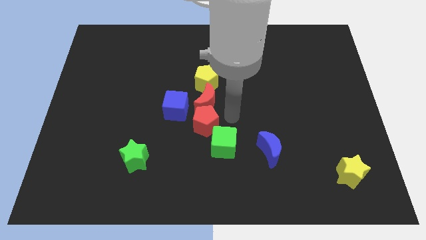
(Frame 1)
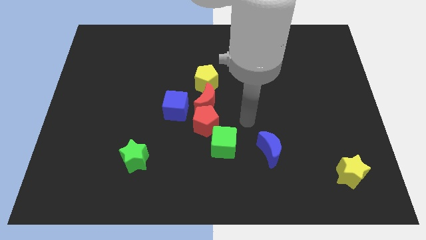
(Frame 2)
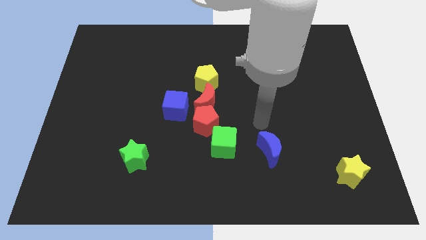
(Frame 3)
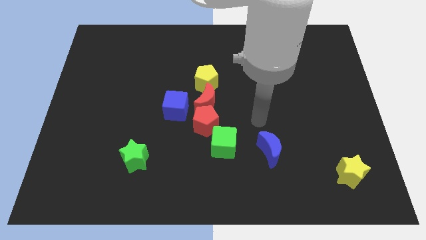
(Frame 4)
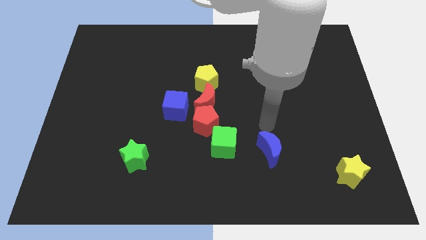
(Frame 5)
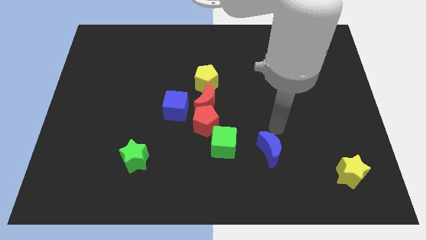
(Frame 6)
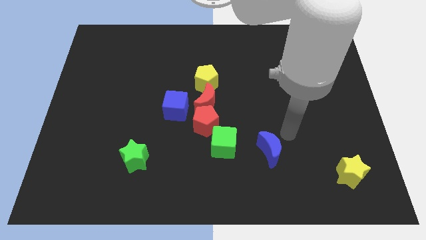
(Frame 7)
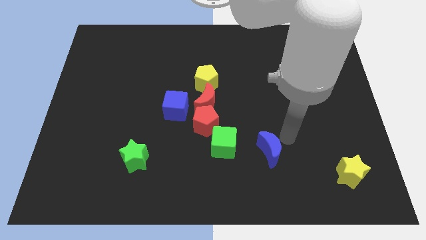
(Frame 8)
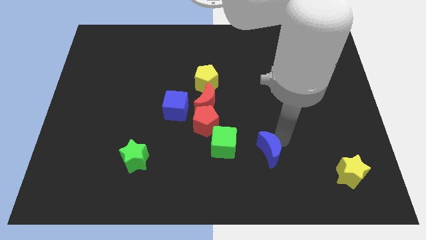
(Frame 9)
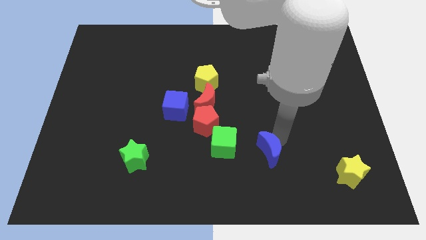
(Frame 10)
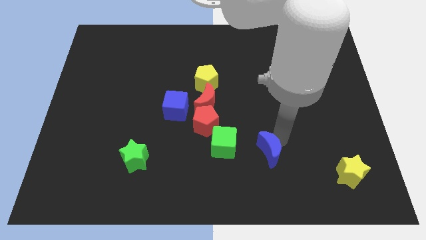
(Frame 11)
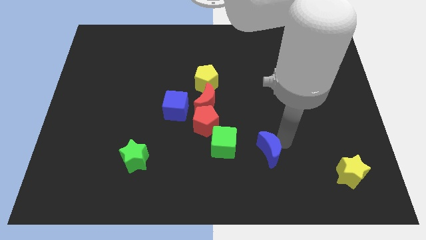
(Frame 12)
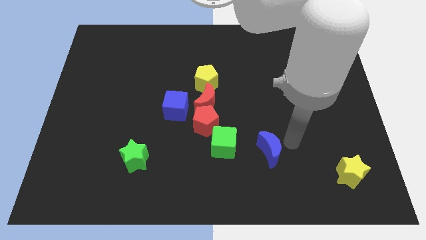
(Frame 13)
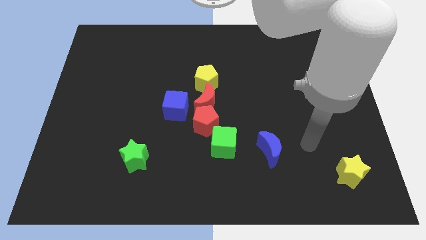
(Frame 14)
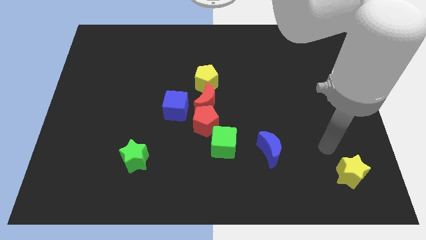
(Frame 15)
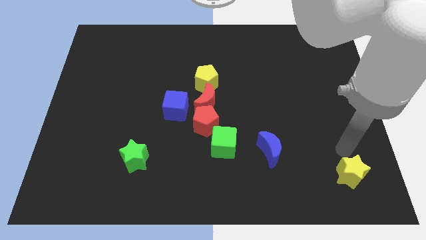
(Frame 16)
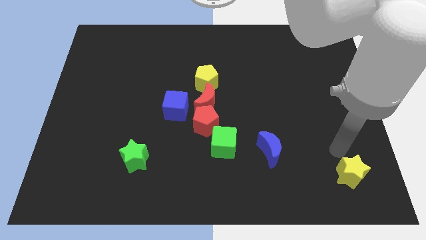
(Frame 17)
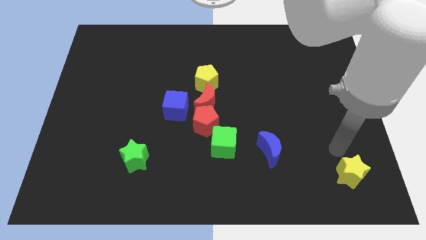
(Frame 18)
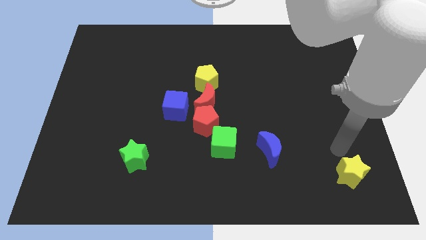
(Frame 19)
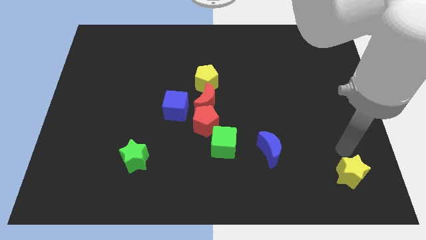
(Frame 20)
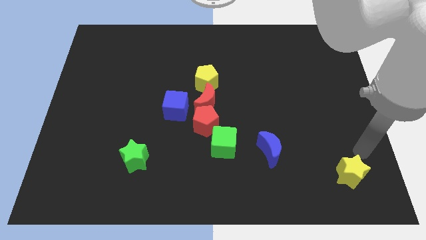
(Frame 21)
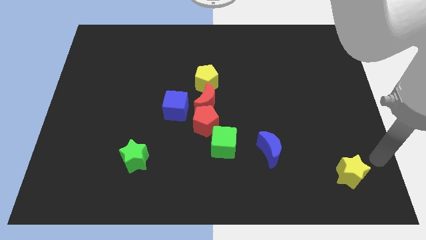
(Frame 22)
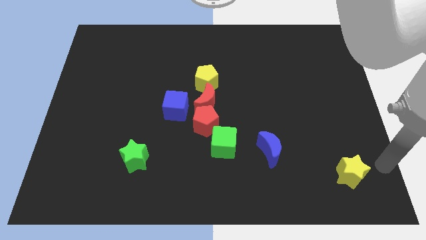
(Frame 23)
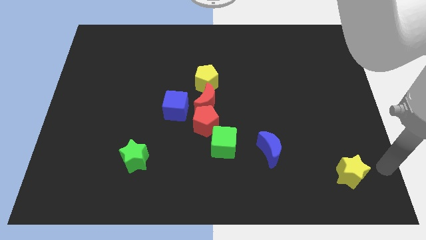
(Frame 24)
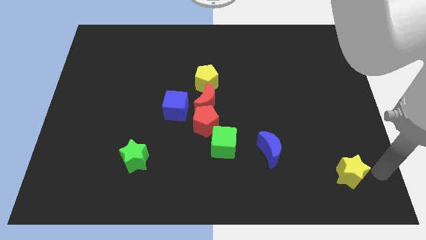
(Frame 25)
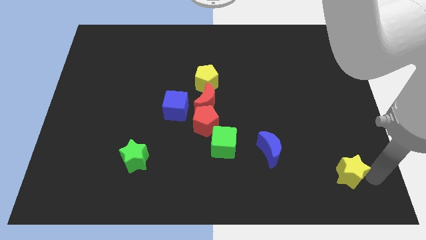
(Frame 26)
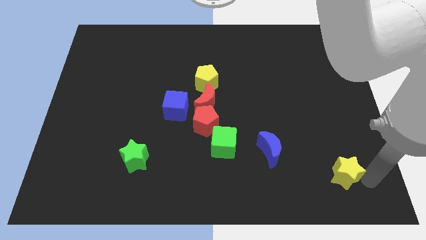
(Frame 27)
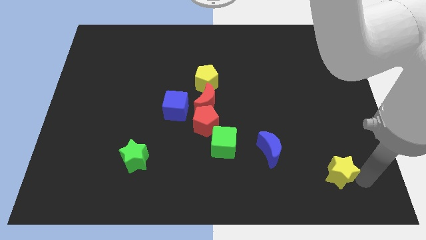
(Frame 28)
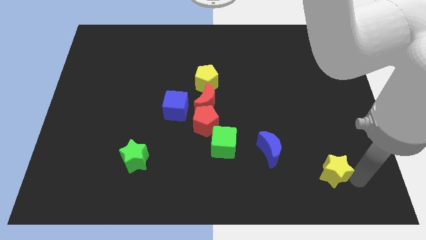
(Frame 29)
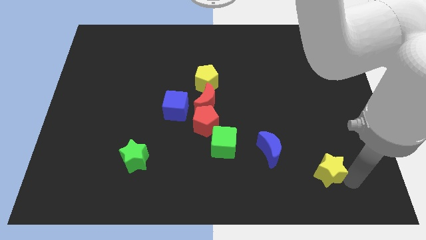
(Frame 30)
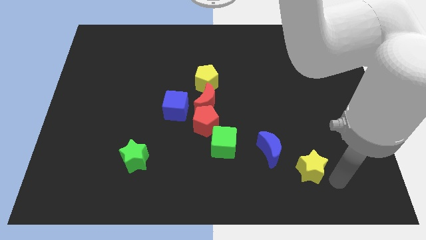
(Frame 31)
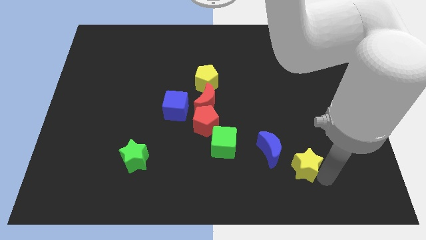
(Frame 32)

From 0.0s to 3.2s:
push the yellow star towards the bottom

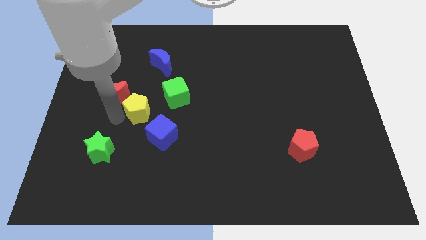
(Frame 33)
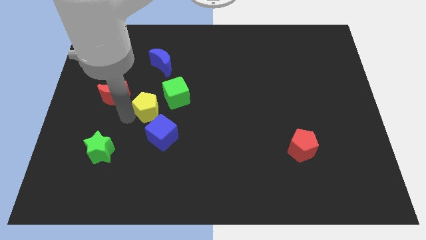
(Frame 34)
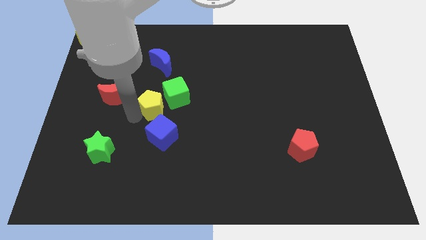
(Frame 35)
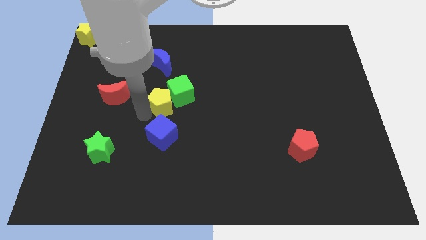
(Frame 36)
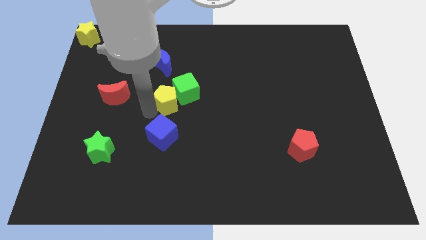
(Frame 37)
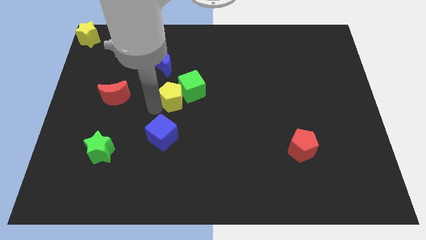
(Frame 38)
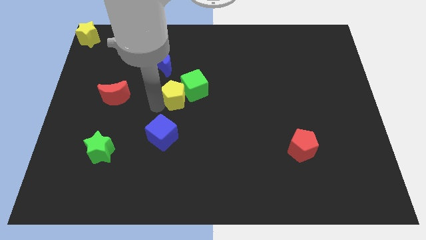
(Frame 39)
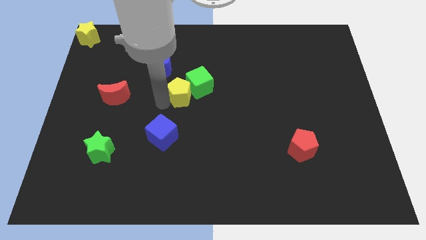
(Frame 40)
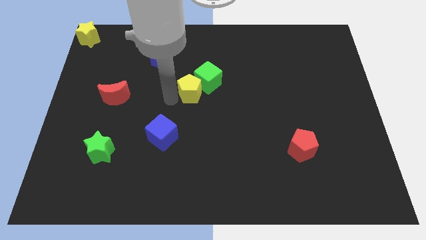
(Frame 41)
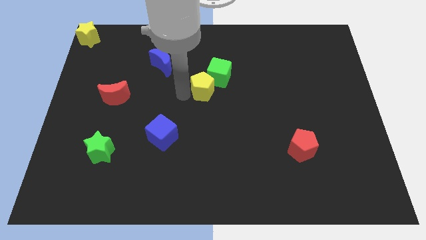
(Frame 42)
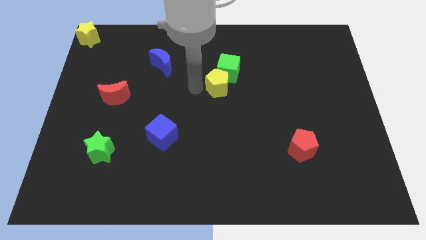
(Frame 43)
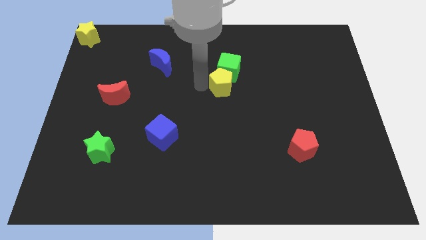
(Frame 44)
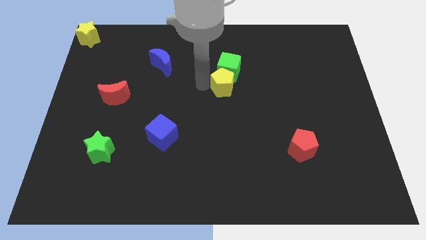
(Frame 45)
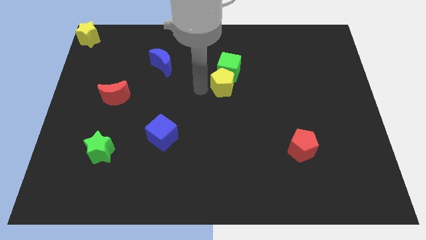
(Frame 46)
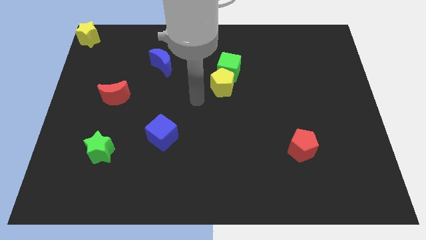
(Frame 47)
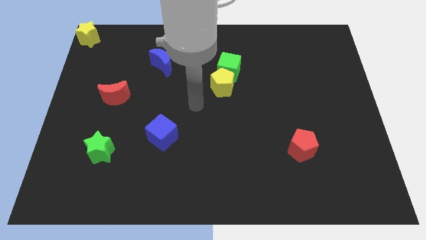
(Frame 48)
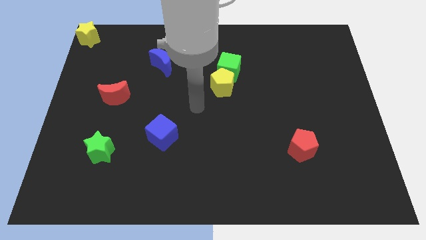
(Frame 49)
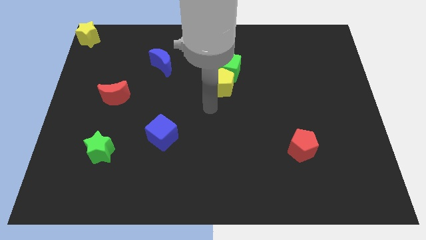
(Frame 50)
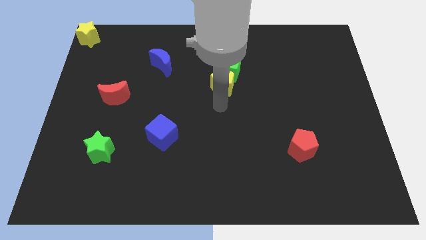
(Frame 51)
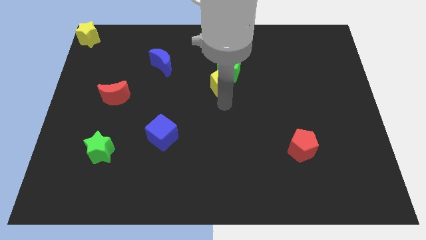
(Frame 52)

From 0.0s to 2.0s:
push the yellow pentagon into the green cube

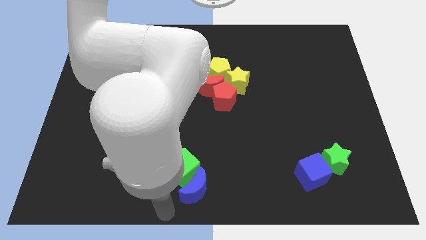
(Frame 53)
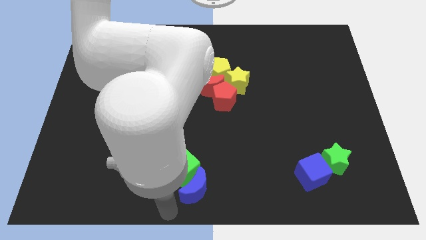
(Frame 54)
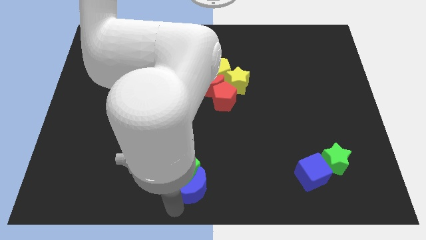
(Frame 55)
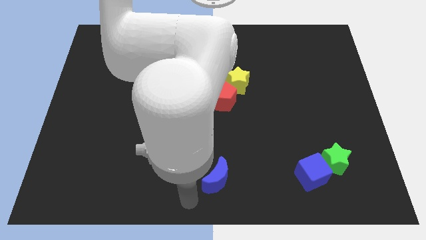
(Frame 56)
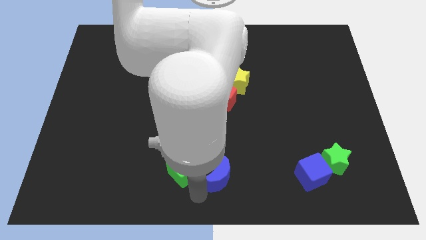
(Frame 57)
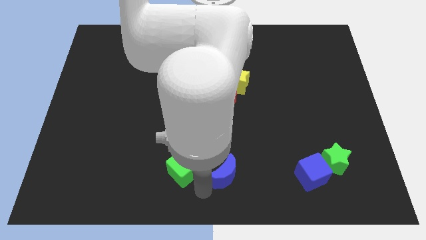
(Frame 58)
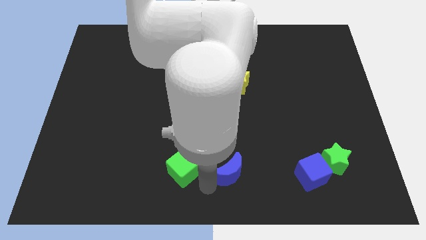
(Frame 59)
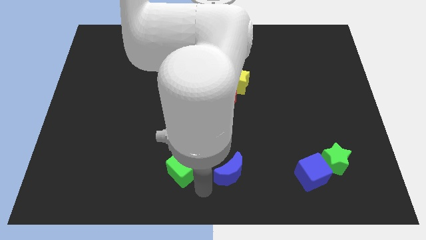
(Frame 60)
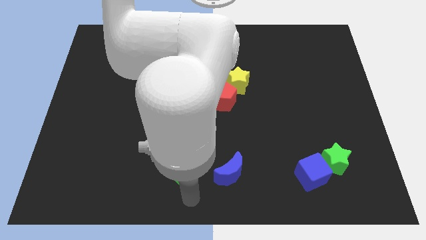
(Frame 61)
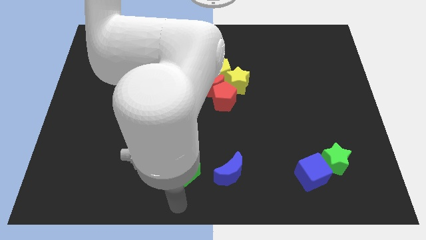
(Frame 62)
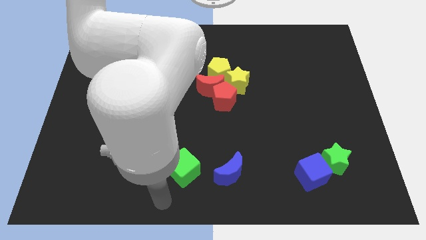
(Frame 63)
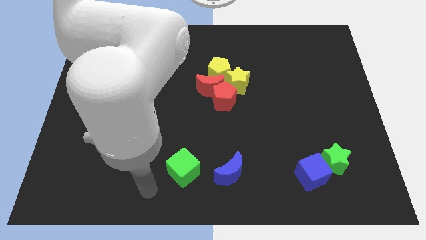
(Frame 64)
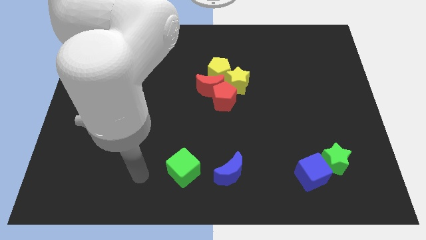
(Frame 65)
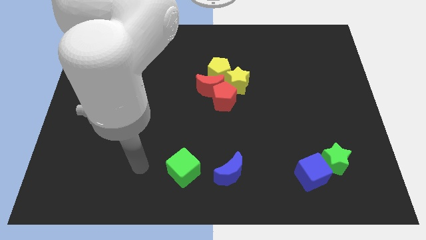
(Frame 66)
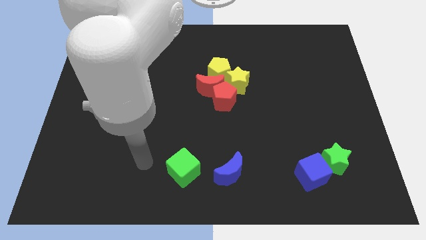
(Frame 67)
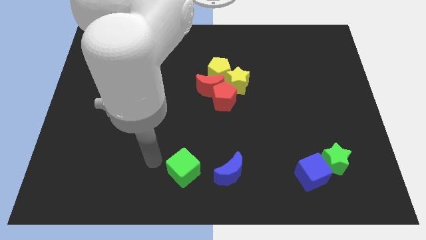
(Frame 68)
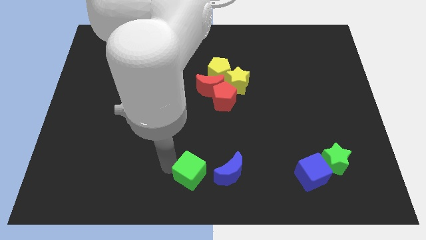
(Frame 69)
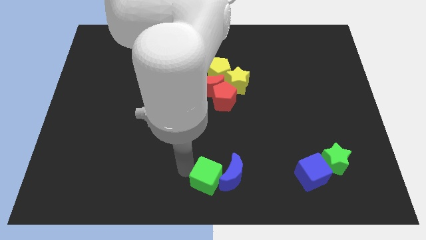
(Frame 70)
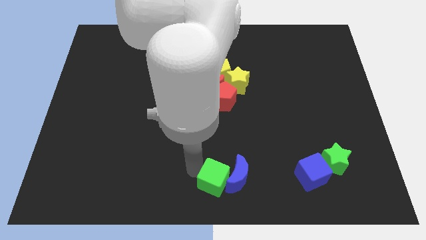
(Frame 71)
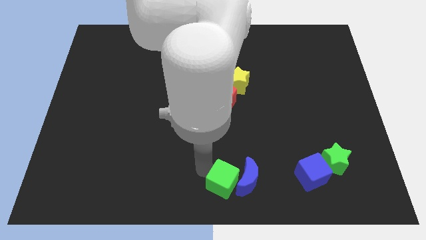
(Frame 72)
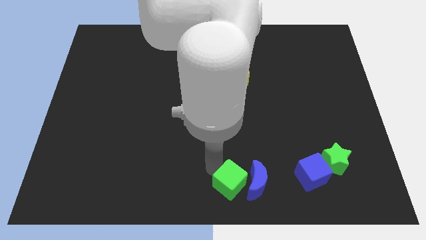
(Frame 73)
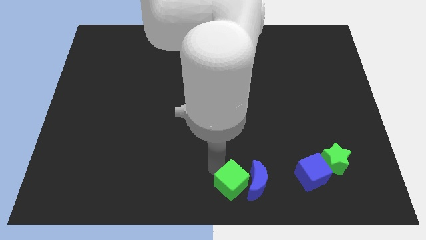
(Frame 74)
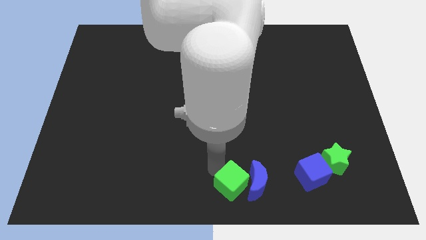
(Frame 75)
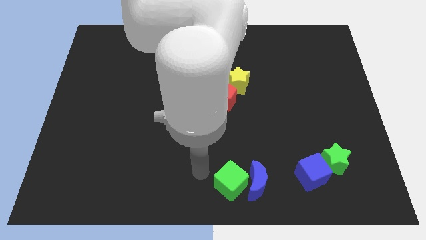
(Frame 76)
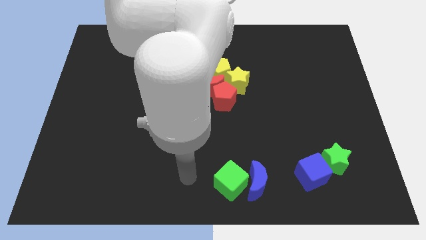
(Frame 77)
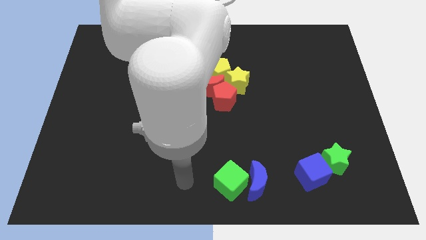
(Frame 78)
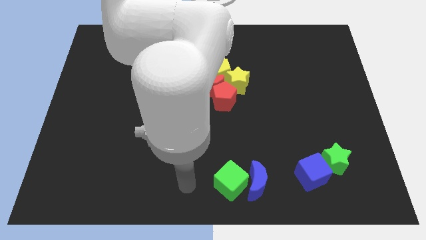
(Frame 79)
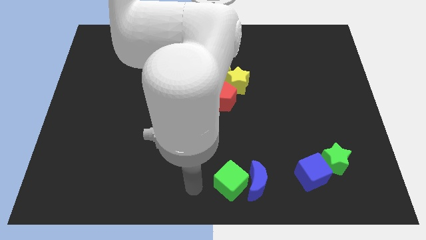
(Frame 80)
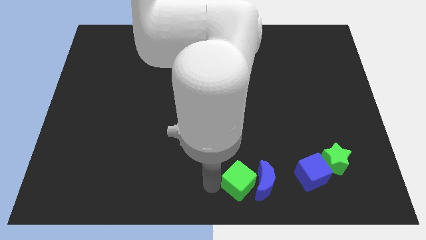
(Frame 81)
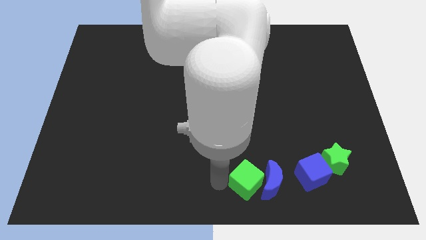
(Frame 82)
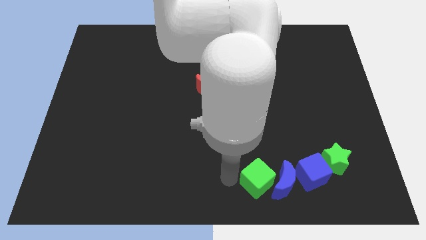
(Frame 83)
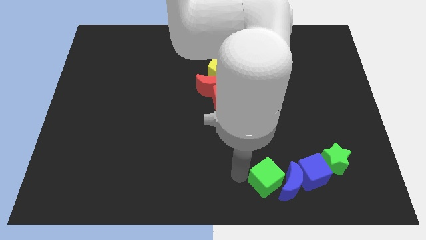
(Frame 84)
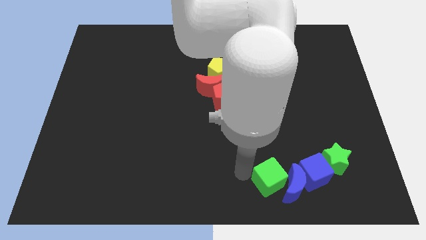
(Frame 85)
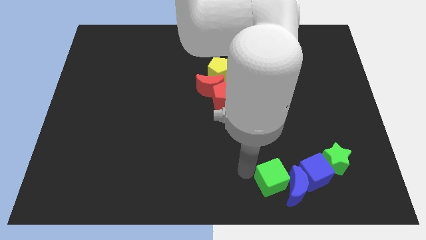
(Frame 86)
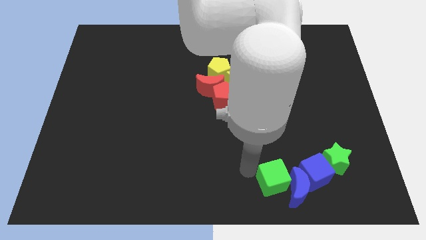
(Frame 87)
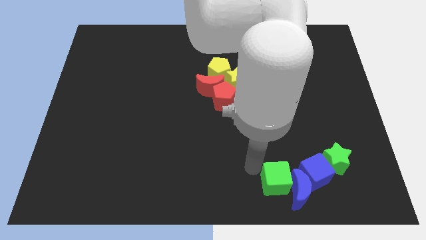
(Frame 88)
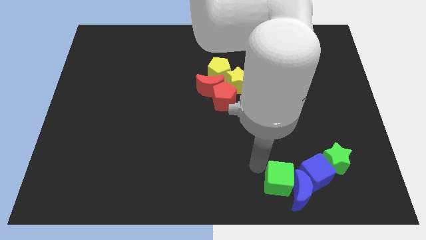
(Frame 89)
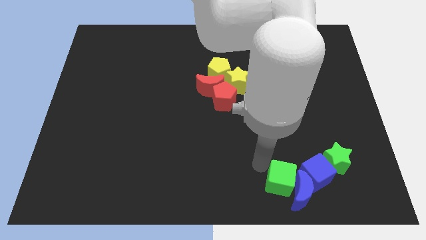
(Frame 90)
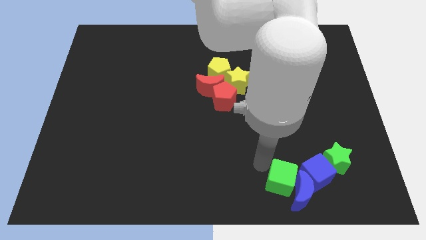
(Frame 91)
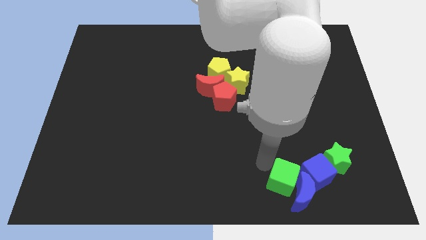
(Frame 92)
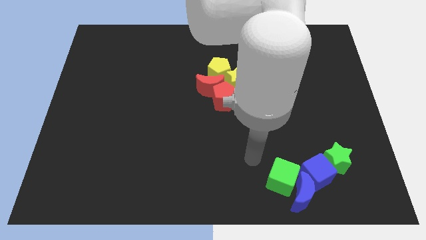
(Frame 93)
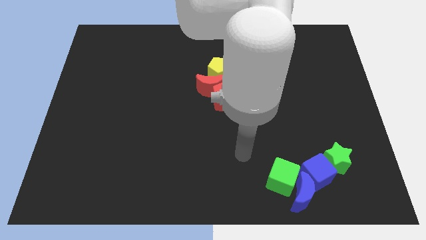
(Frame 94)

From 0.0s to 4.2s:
push the blue moon into the blue cube
